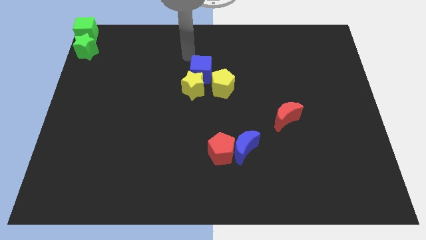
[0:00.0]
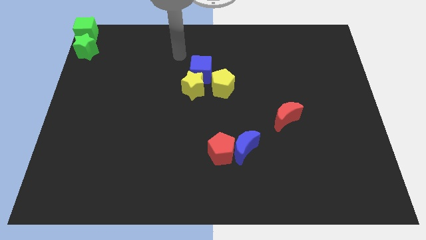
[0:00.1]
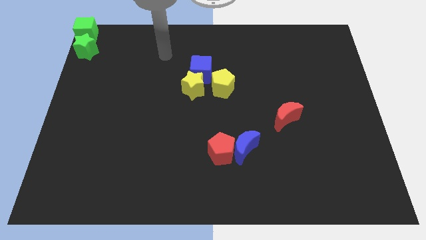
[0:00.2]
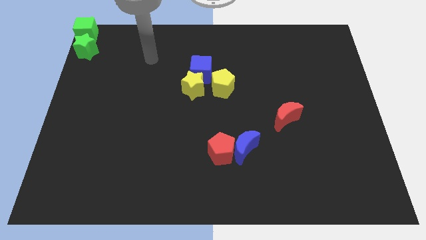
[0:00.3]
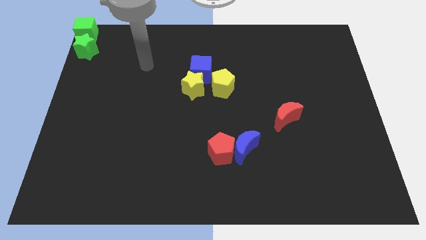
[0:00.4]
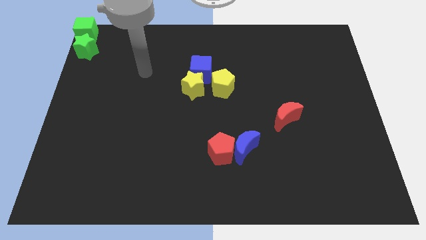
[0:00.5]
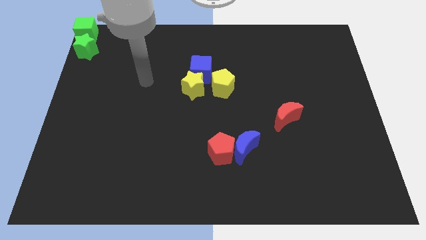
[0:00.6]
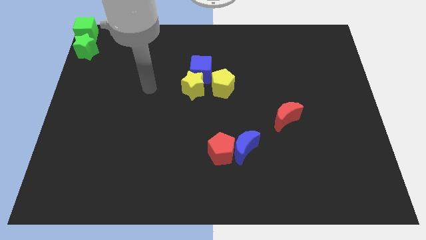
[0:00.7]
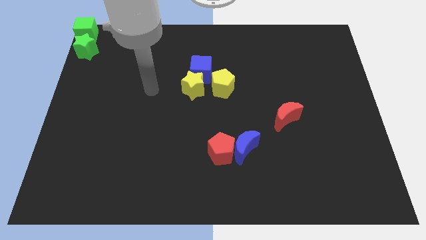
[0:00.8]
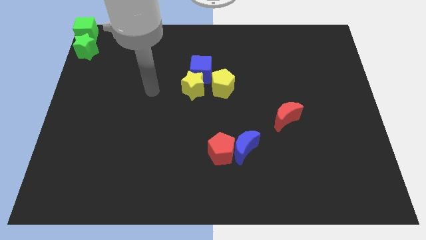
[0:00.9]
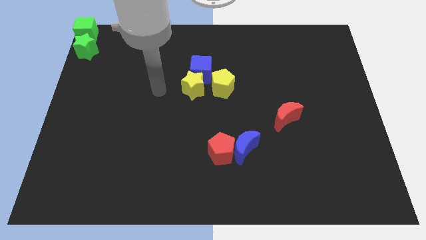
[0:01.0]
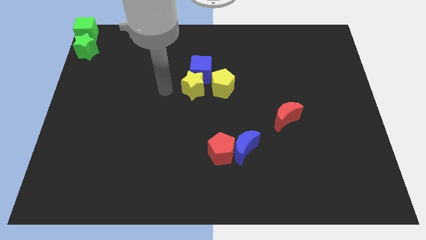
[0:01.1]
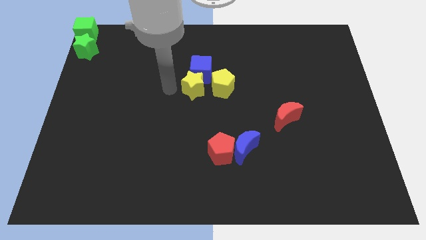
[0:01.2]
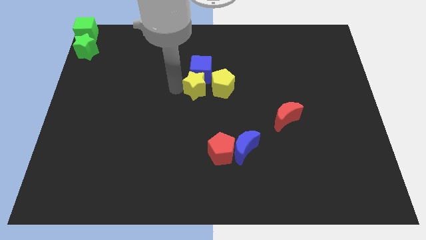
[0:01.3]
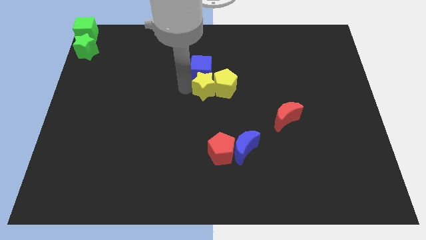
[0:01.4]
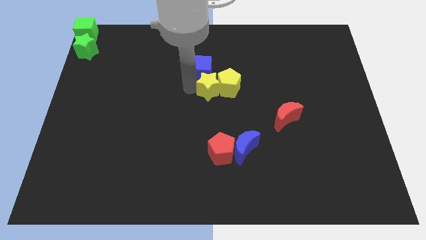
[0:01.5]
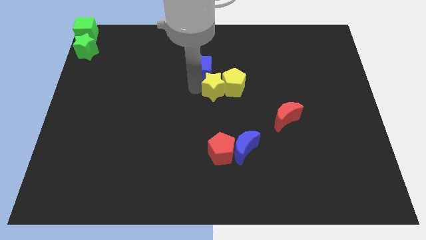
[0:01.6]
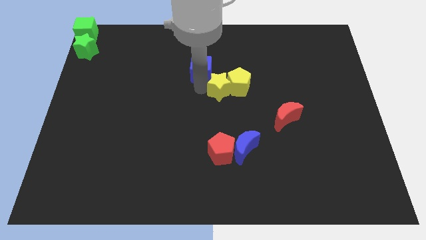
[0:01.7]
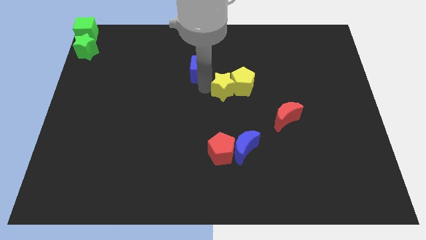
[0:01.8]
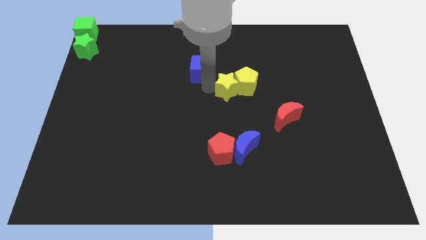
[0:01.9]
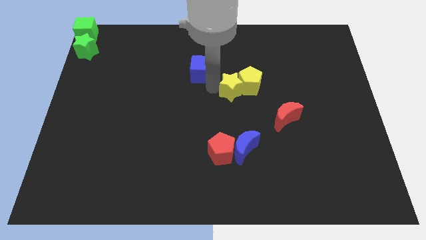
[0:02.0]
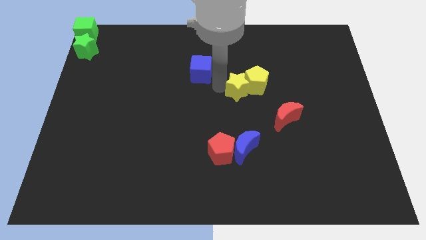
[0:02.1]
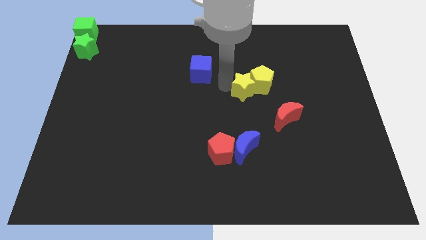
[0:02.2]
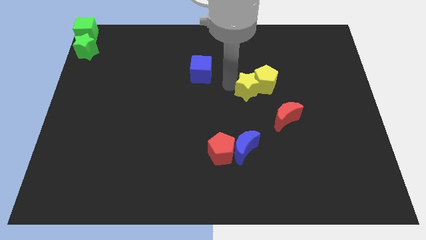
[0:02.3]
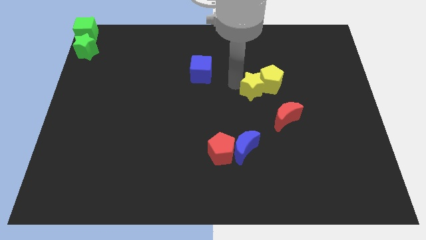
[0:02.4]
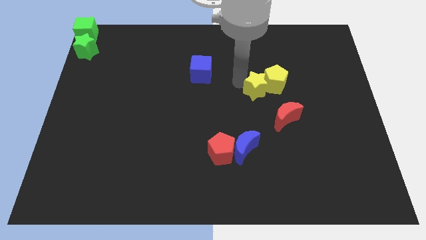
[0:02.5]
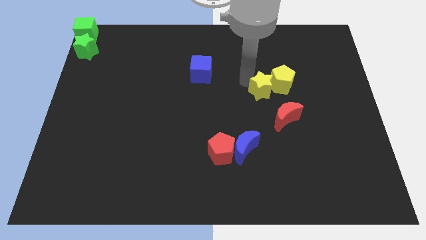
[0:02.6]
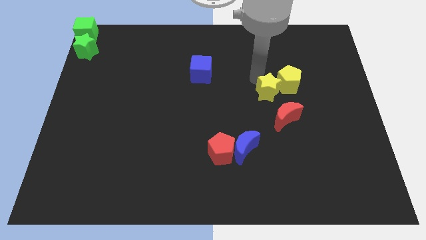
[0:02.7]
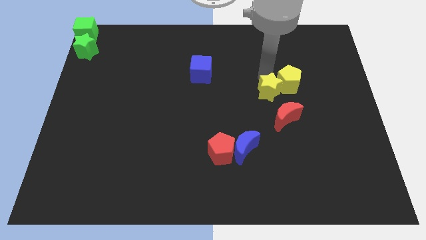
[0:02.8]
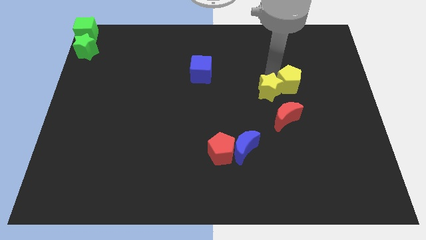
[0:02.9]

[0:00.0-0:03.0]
move the group of yellow blocks to the right

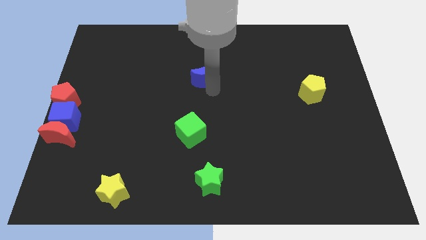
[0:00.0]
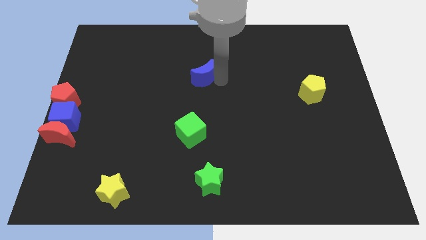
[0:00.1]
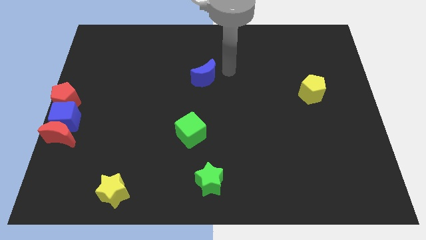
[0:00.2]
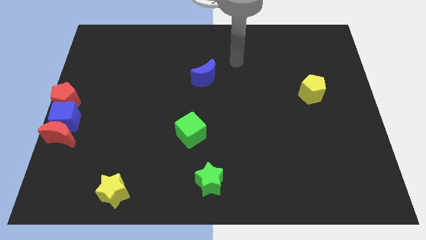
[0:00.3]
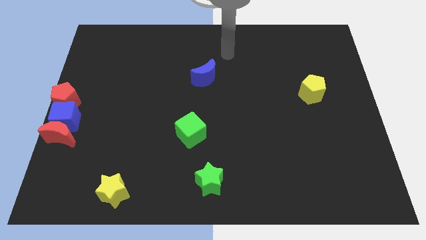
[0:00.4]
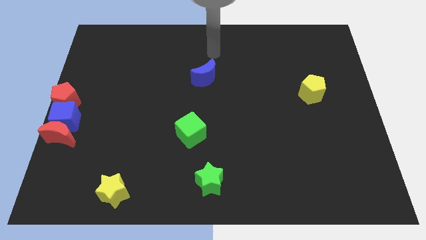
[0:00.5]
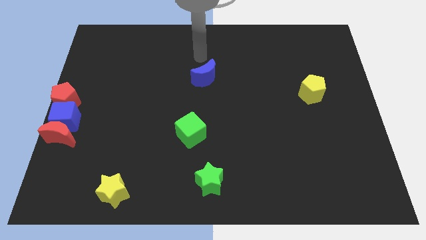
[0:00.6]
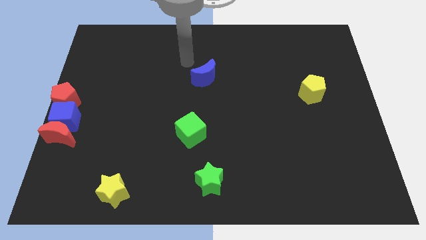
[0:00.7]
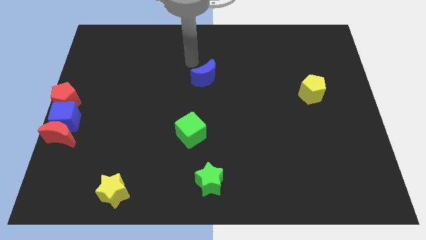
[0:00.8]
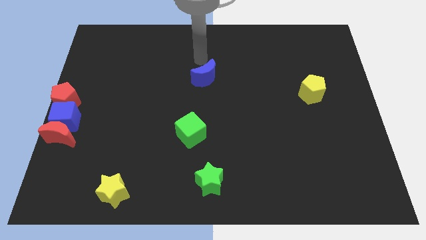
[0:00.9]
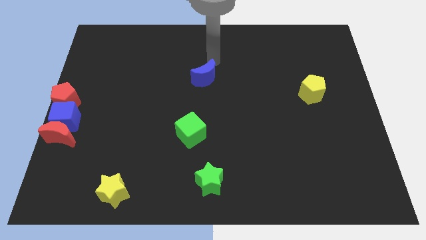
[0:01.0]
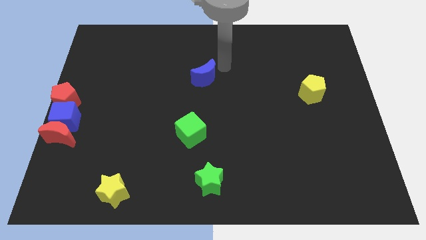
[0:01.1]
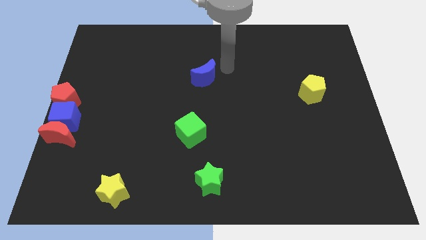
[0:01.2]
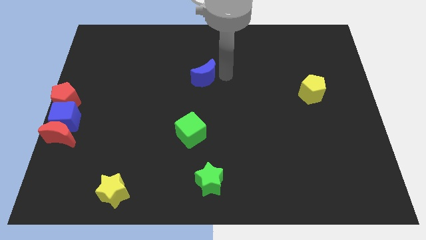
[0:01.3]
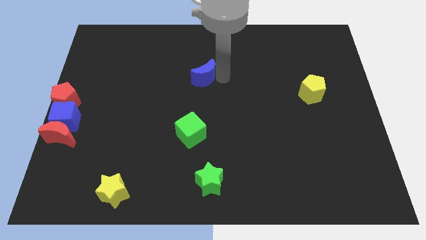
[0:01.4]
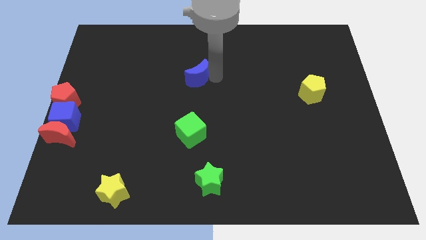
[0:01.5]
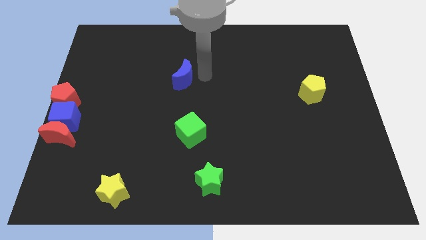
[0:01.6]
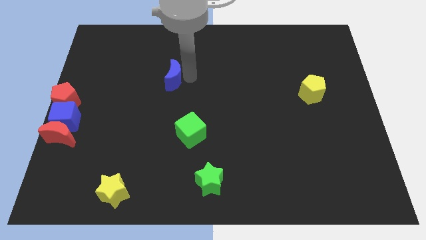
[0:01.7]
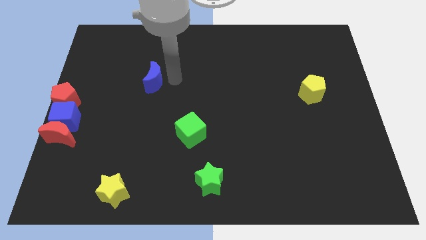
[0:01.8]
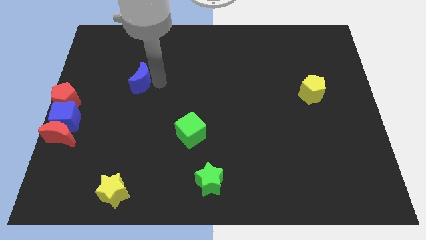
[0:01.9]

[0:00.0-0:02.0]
move blue moon slightly left

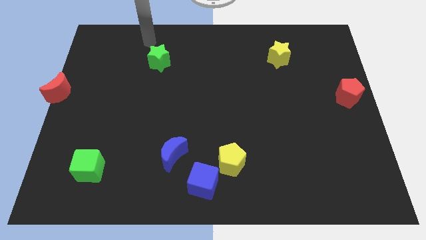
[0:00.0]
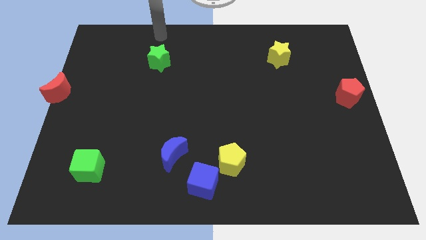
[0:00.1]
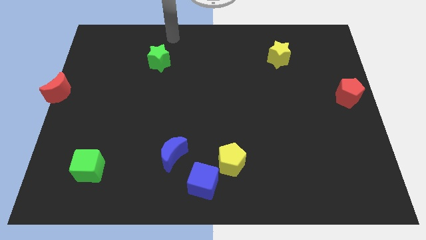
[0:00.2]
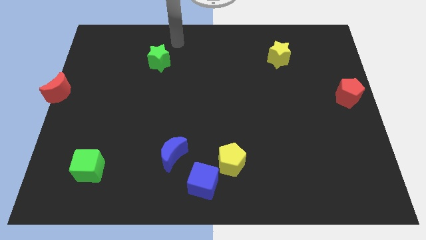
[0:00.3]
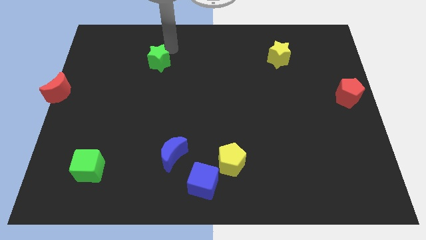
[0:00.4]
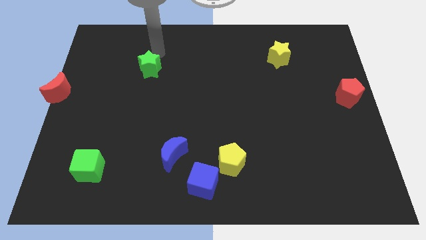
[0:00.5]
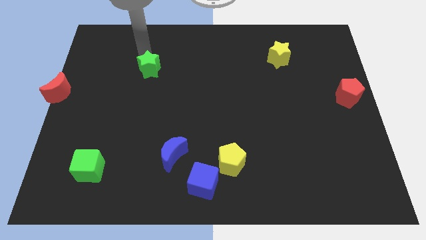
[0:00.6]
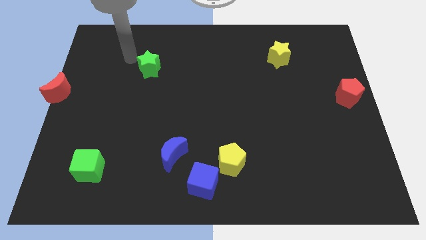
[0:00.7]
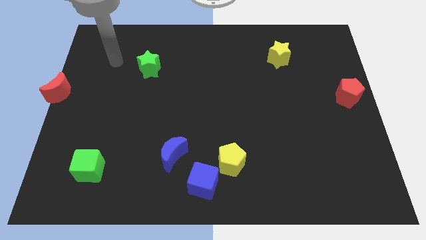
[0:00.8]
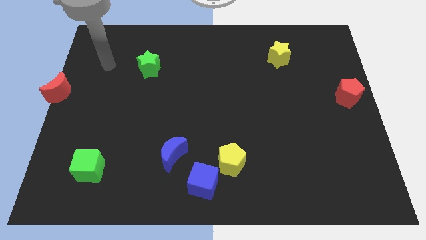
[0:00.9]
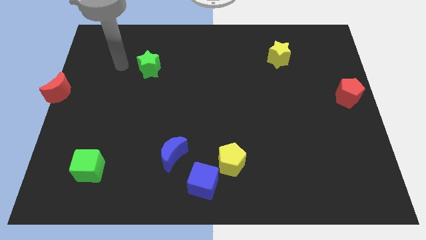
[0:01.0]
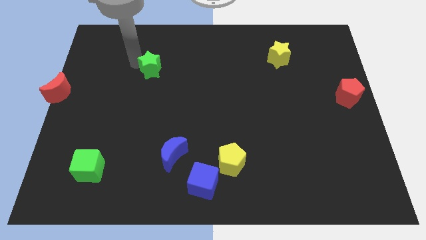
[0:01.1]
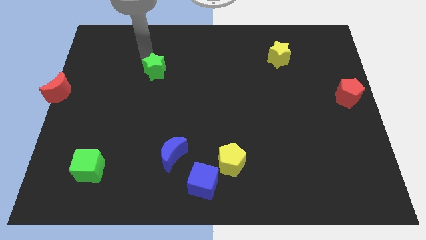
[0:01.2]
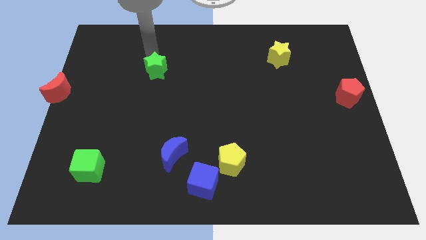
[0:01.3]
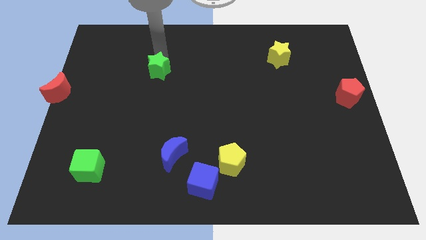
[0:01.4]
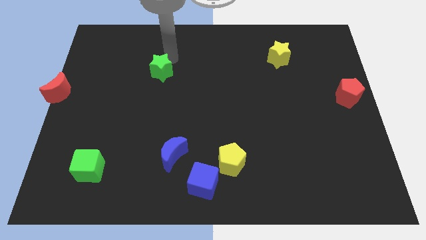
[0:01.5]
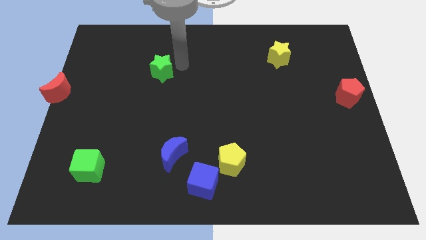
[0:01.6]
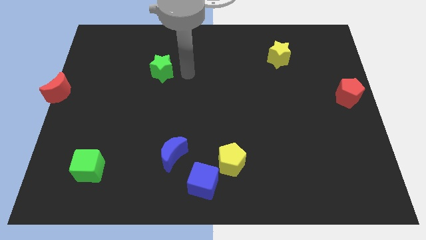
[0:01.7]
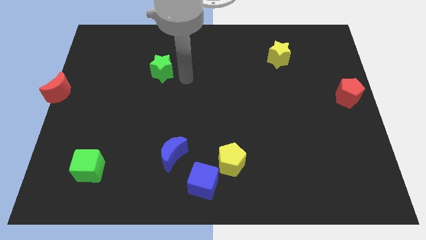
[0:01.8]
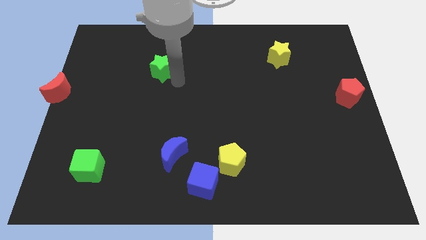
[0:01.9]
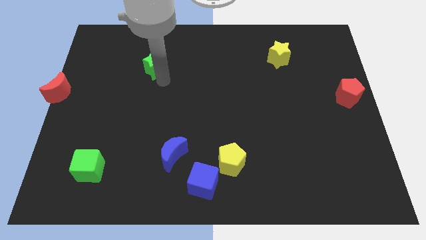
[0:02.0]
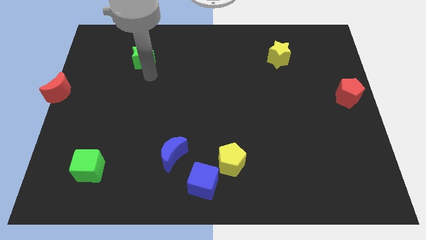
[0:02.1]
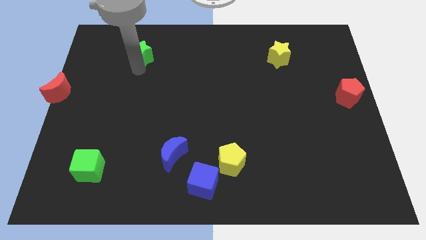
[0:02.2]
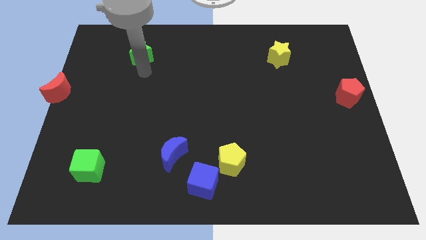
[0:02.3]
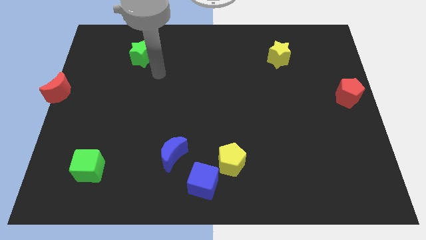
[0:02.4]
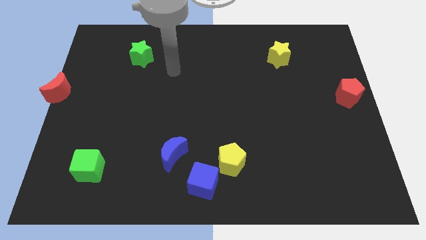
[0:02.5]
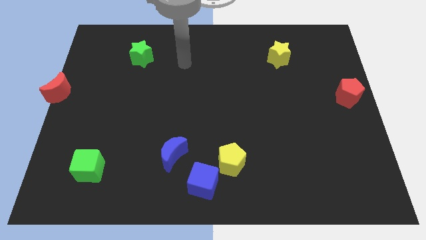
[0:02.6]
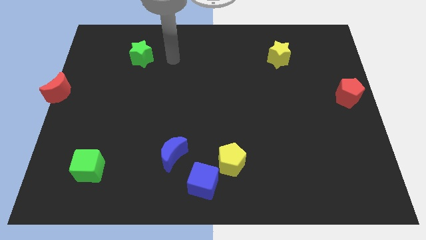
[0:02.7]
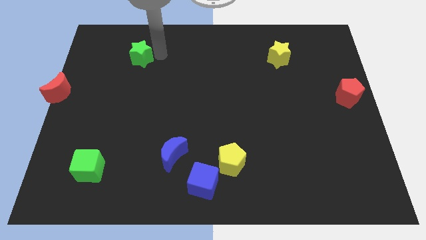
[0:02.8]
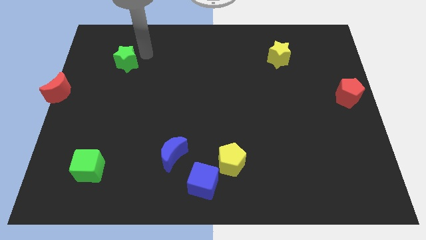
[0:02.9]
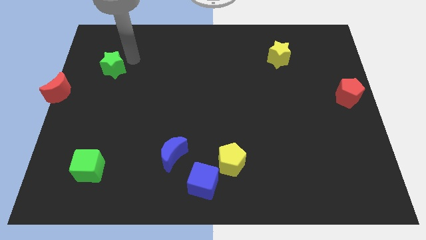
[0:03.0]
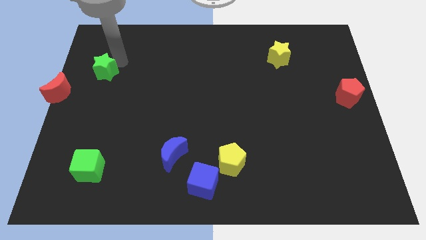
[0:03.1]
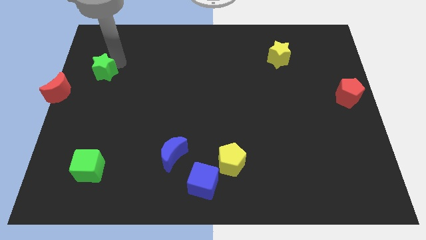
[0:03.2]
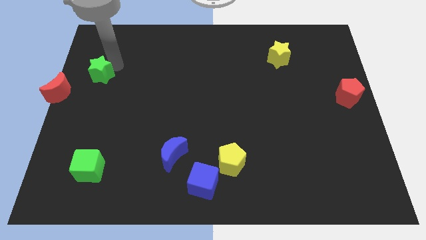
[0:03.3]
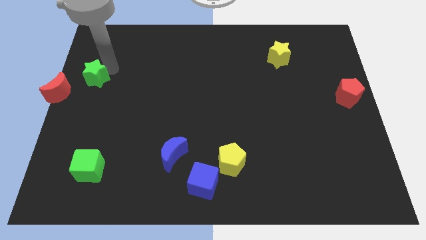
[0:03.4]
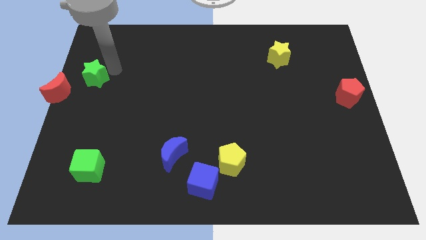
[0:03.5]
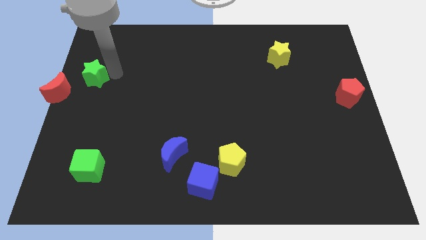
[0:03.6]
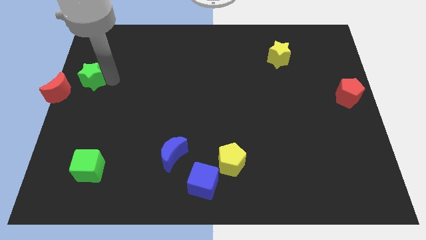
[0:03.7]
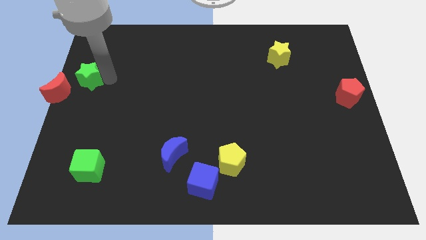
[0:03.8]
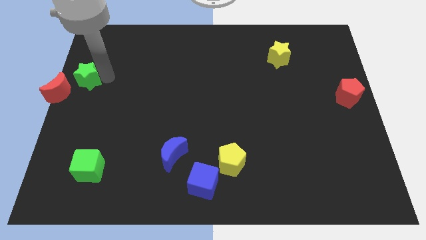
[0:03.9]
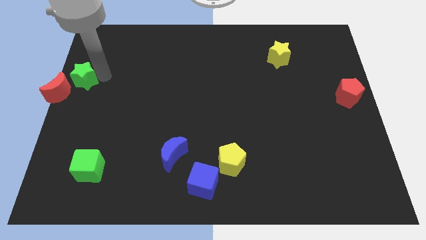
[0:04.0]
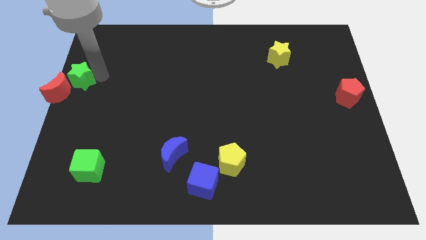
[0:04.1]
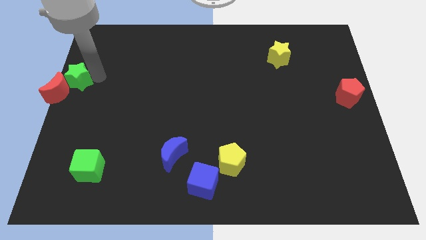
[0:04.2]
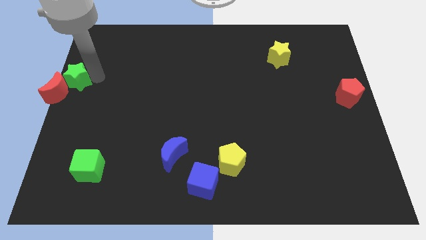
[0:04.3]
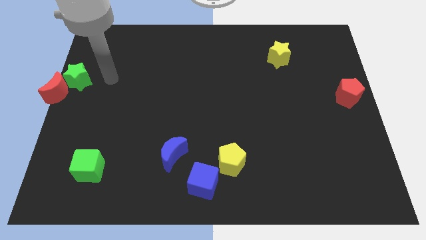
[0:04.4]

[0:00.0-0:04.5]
move the green star diagonally to the red moon
